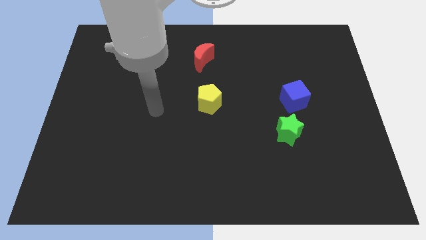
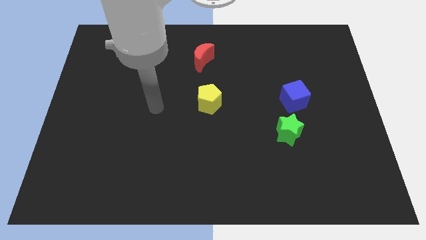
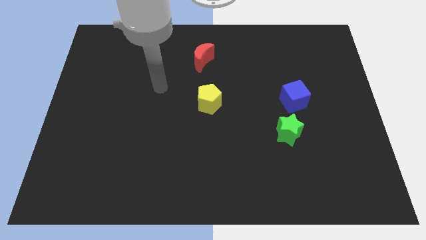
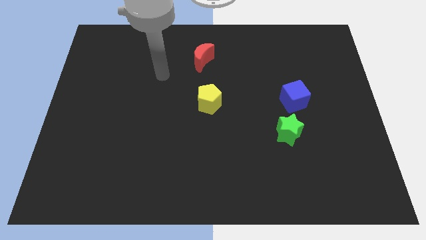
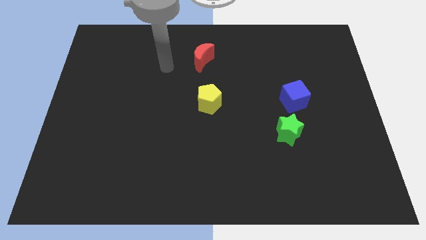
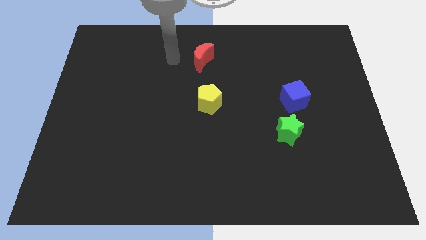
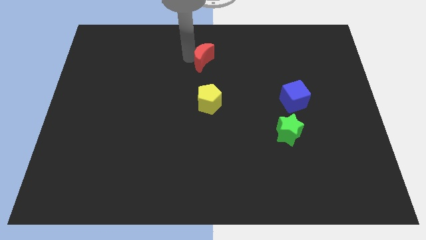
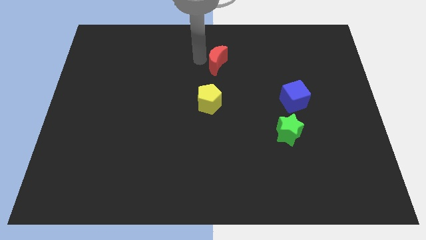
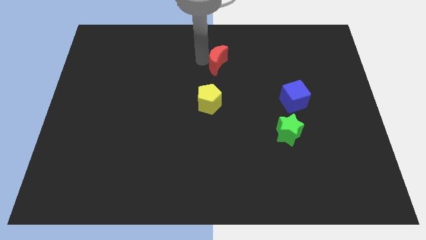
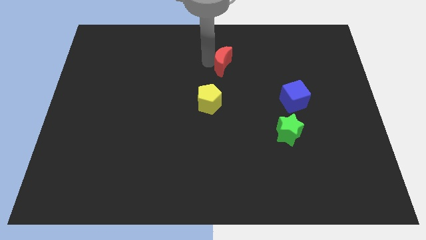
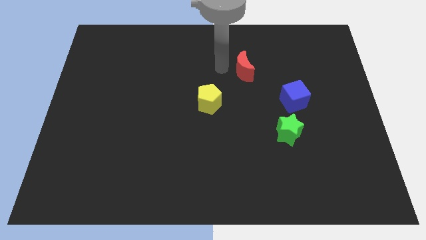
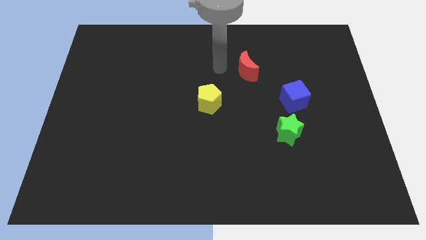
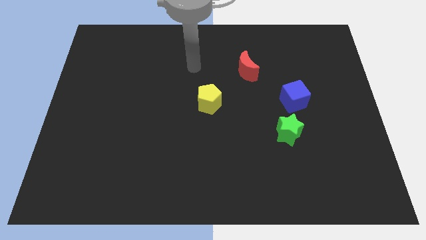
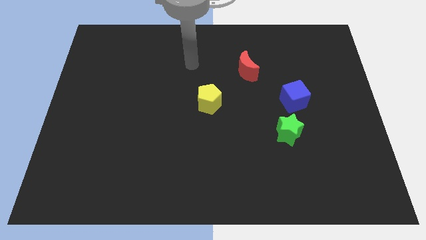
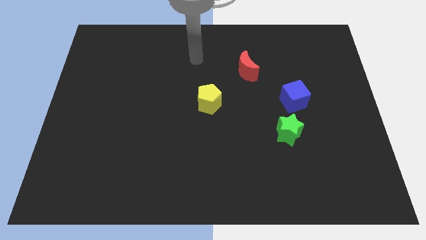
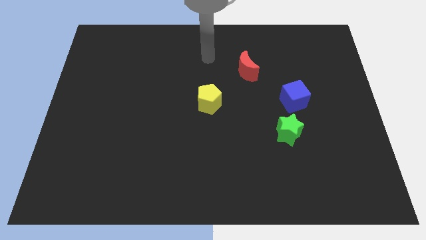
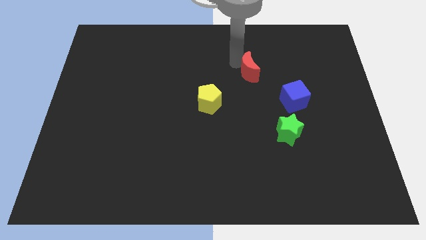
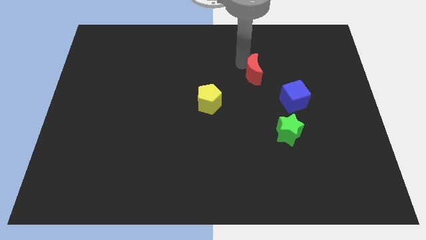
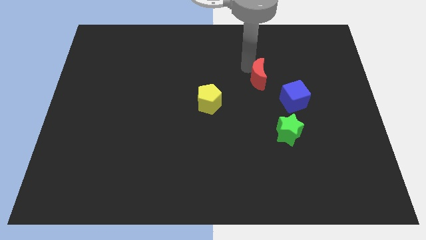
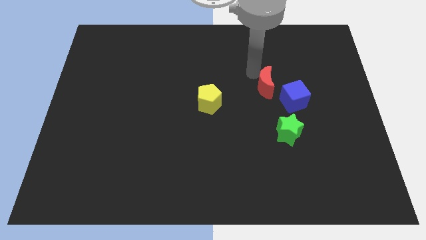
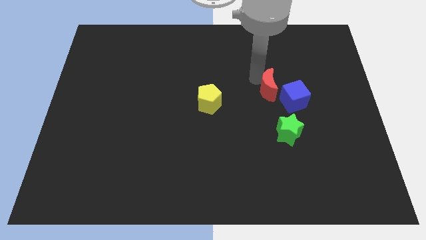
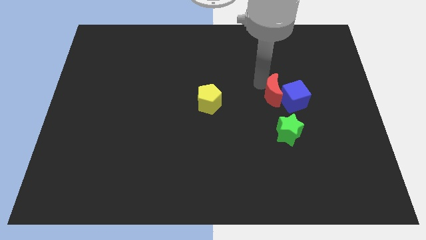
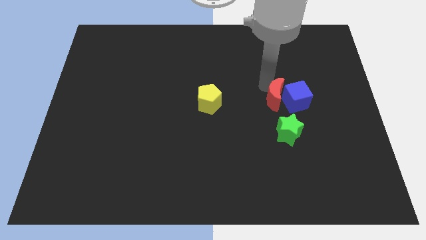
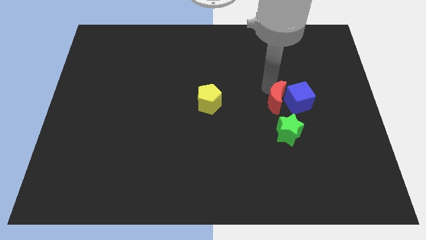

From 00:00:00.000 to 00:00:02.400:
push the moon close to the cube

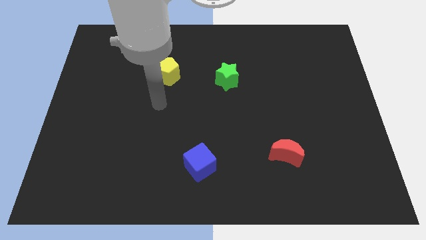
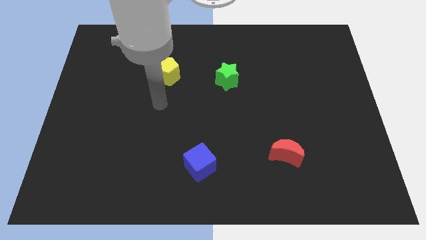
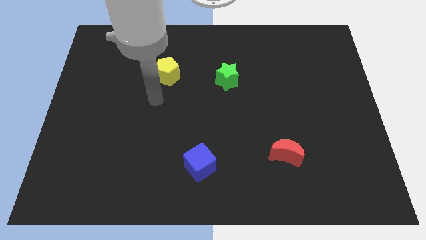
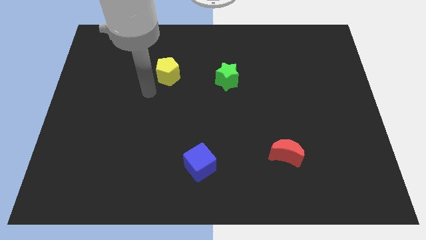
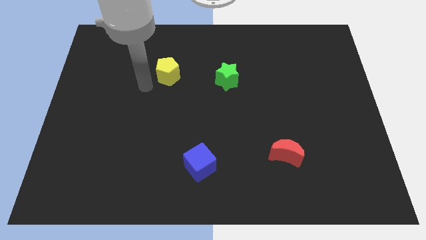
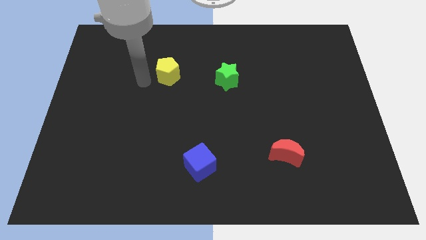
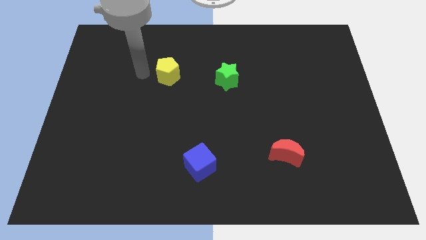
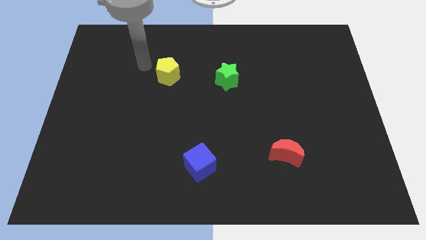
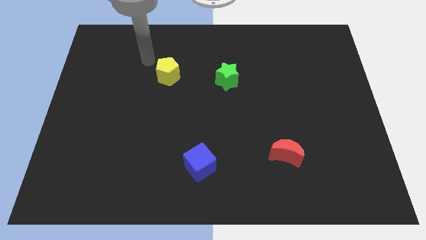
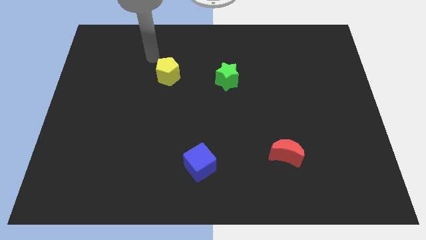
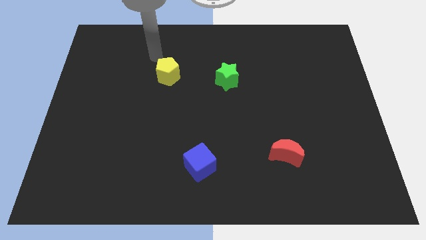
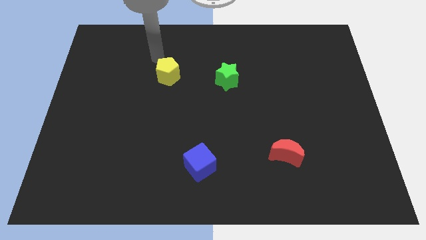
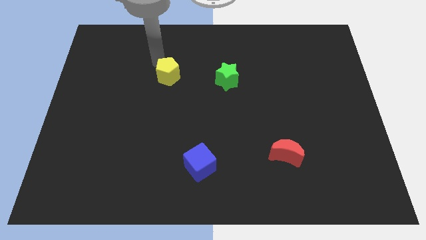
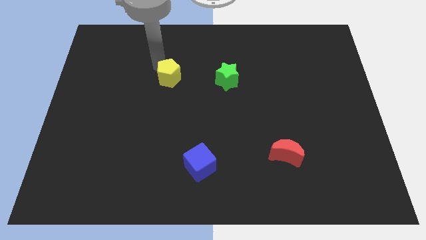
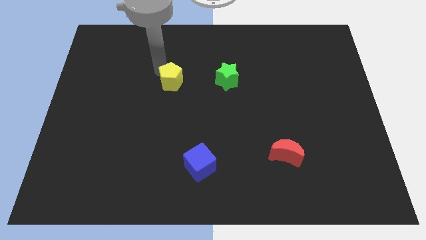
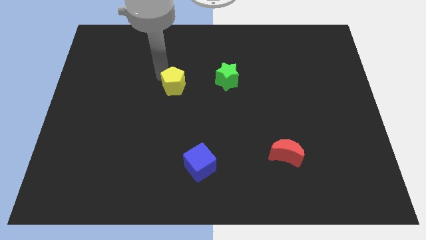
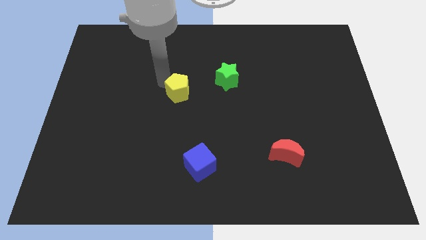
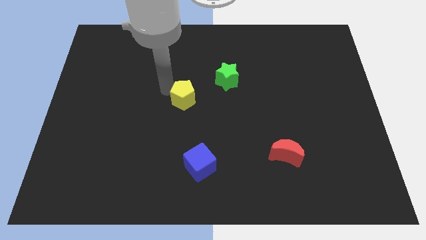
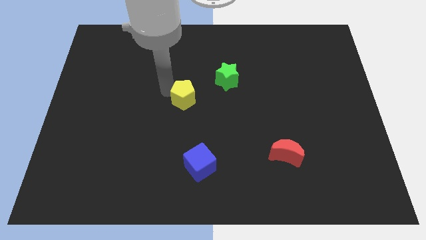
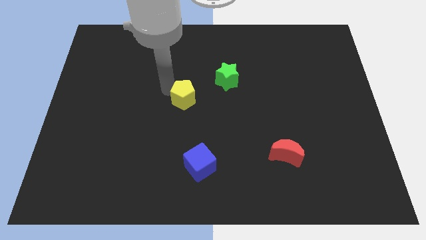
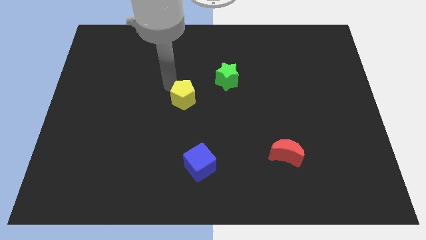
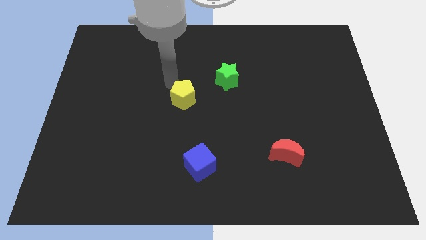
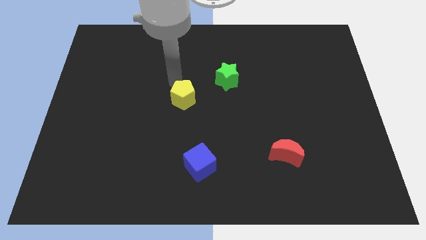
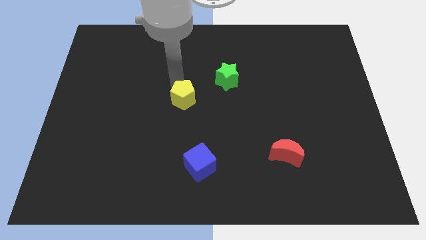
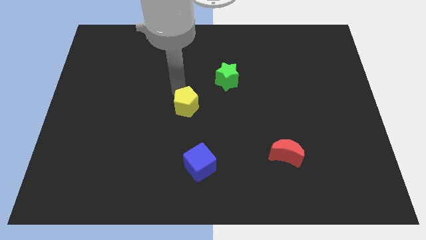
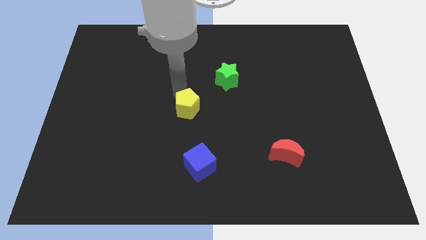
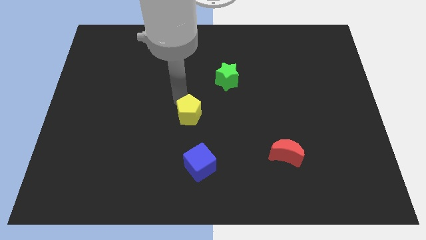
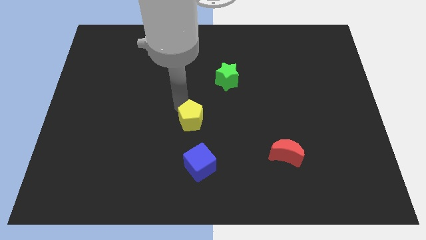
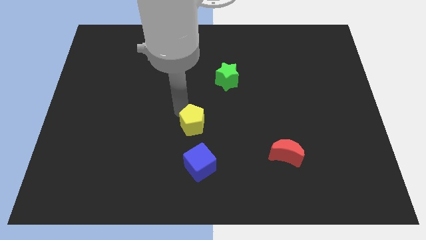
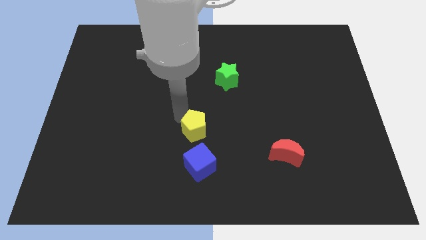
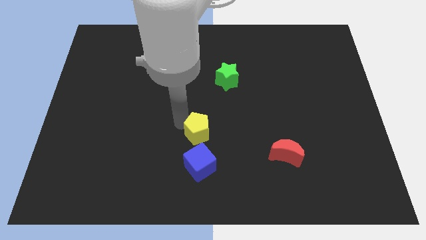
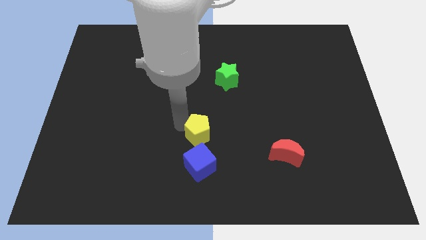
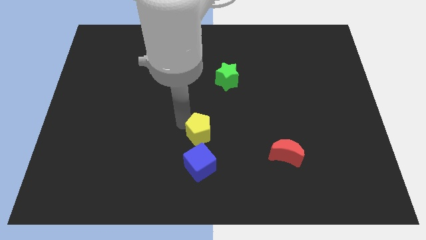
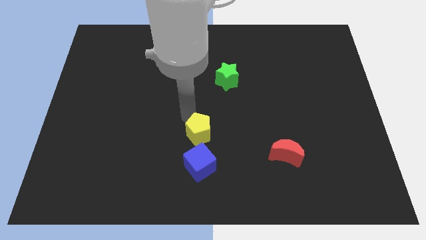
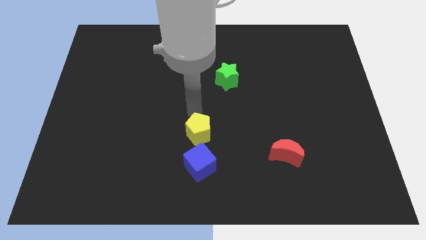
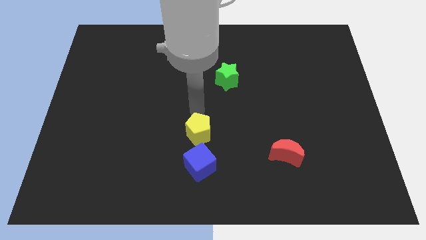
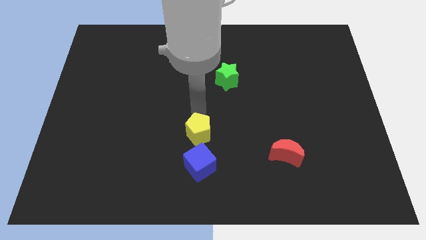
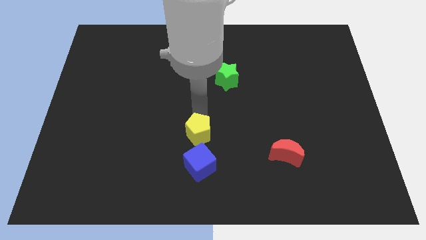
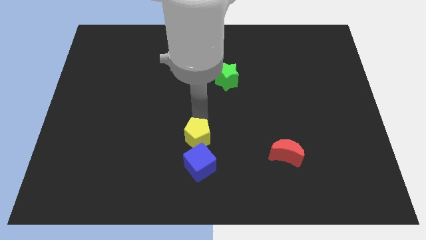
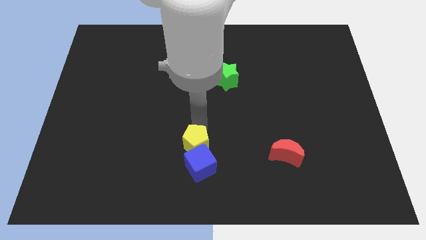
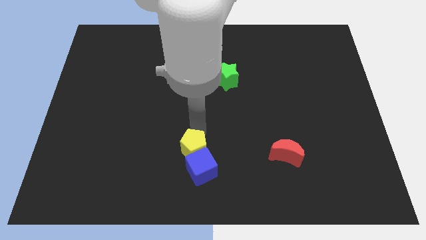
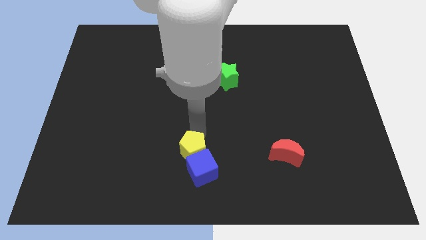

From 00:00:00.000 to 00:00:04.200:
slide the pentagon to the blue cube

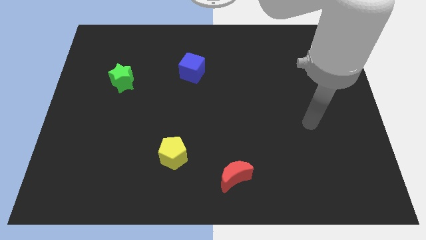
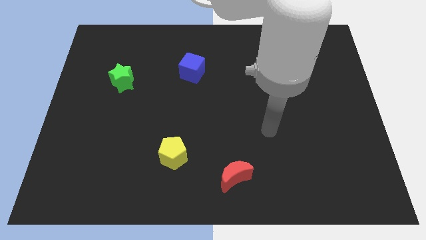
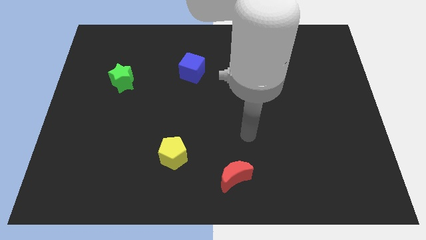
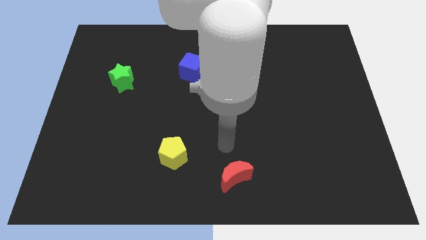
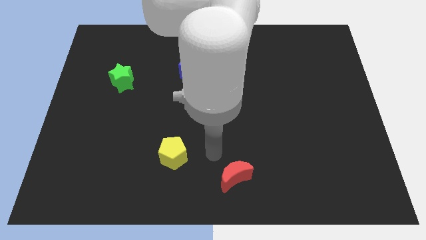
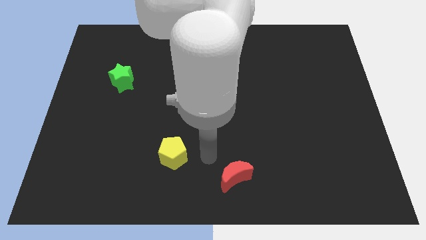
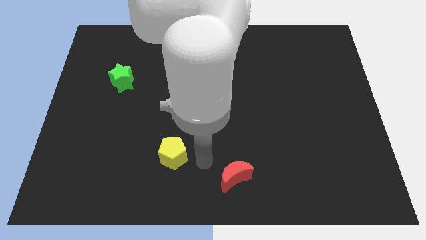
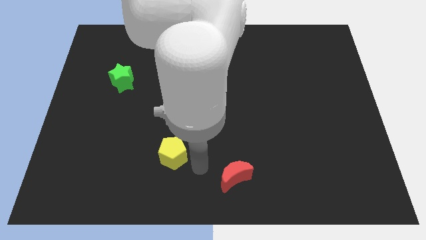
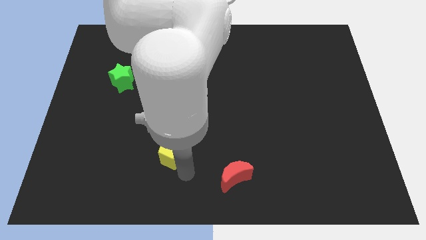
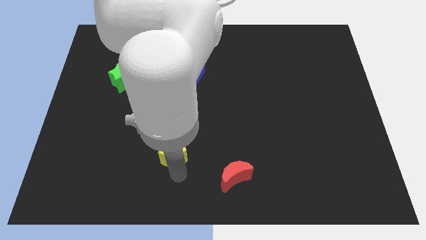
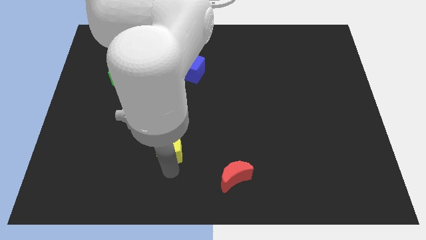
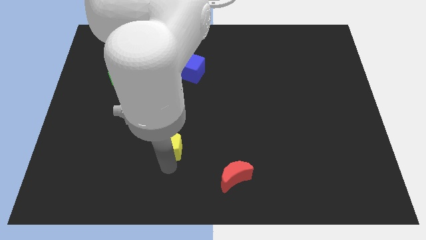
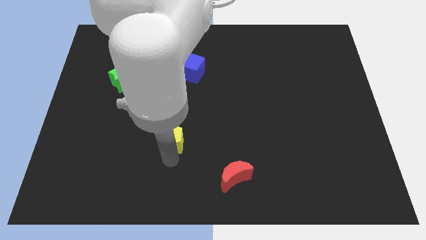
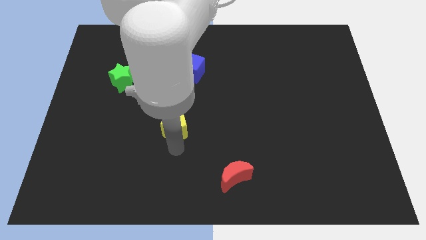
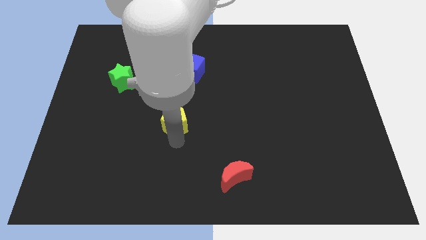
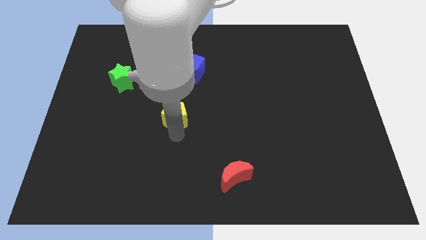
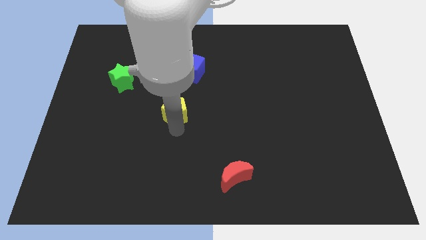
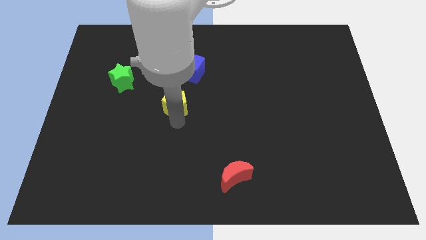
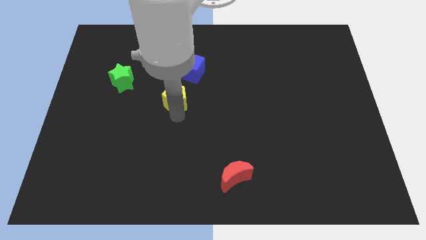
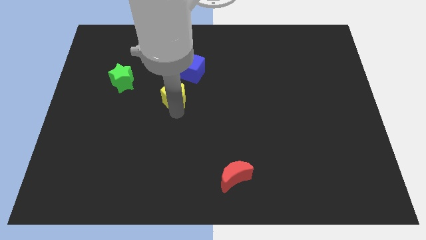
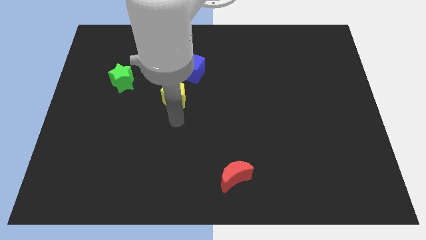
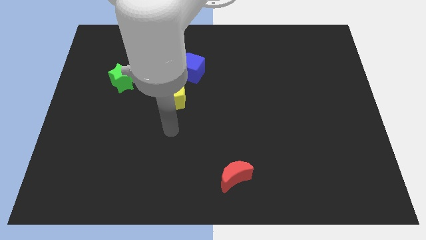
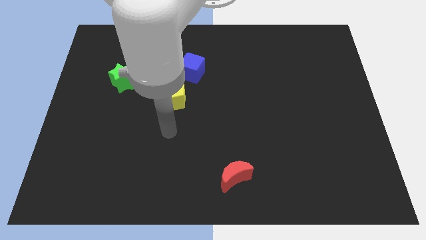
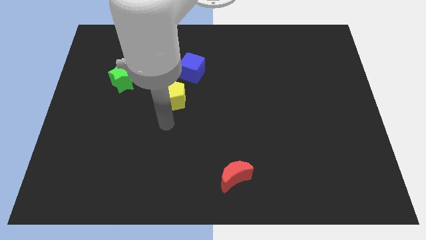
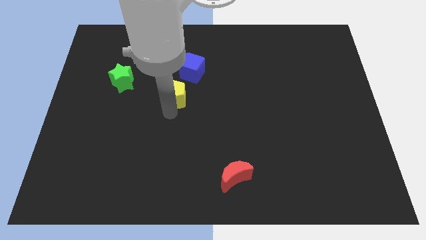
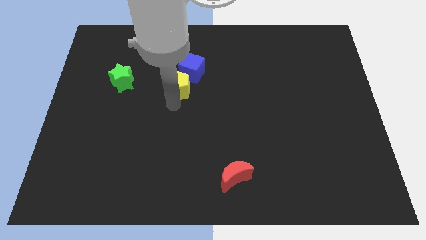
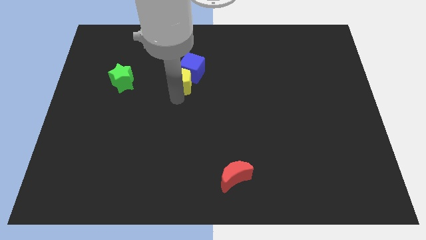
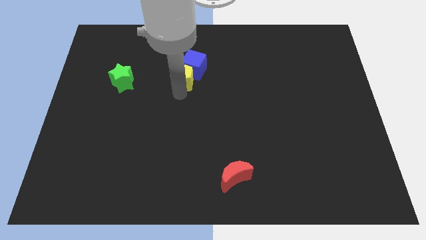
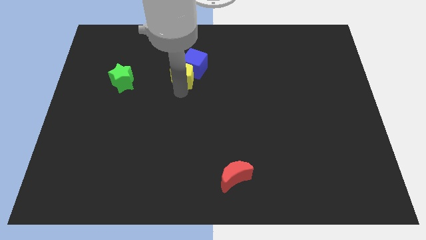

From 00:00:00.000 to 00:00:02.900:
slide the pentagon towards the blue cube
